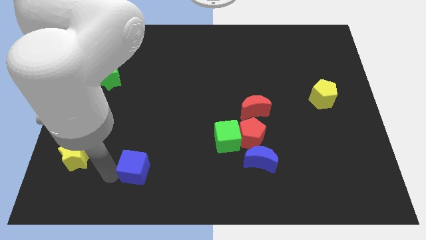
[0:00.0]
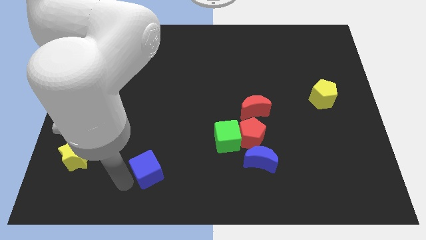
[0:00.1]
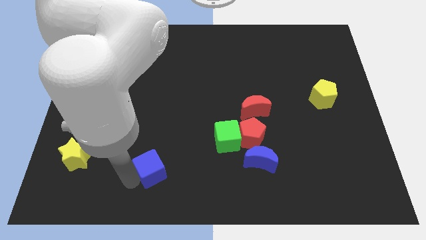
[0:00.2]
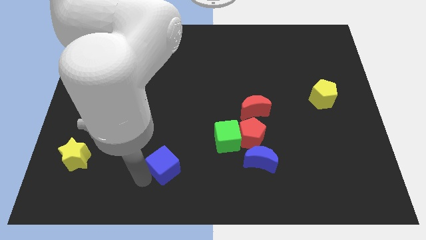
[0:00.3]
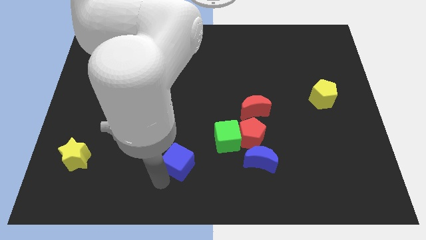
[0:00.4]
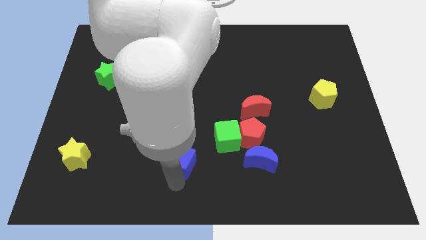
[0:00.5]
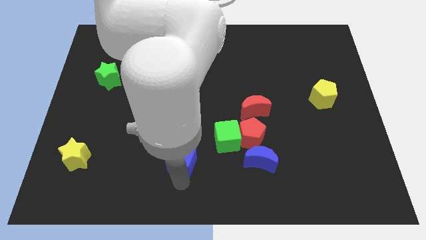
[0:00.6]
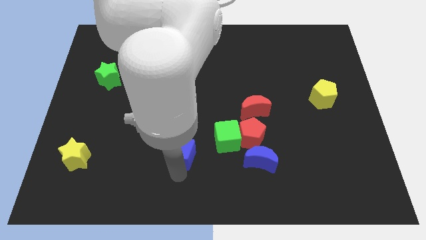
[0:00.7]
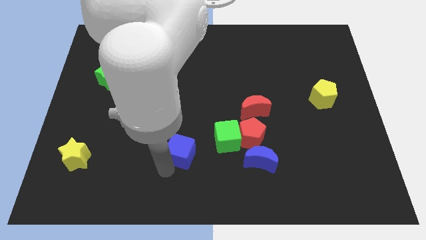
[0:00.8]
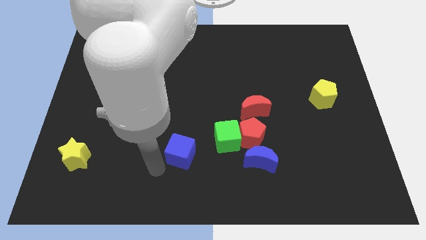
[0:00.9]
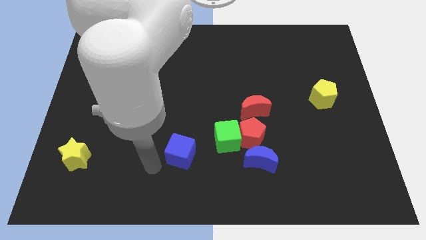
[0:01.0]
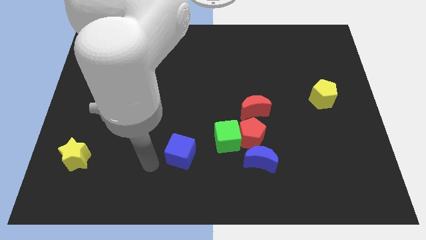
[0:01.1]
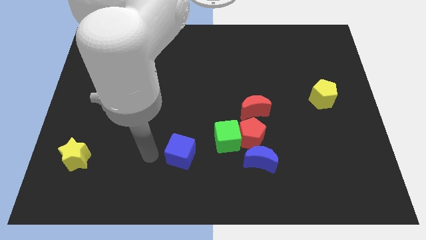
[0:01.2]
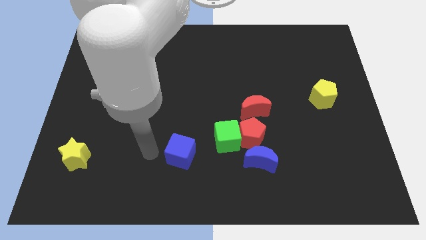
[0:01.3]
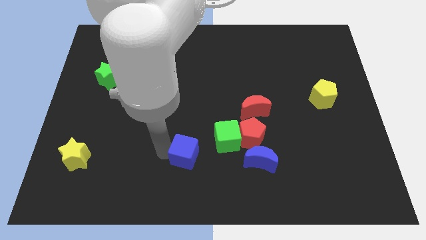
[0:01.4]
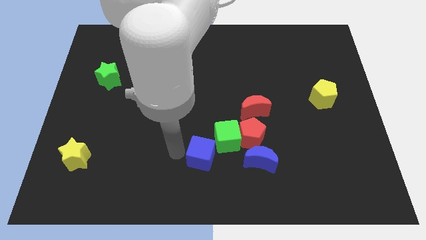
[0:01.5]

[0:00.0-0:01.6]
push the blue cube towards the green cube

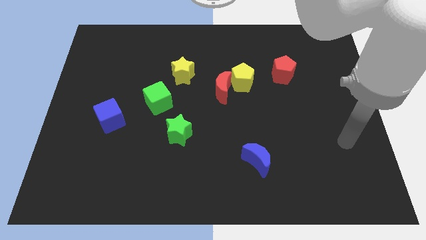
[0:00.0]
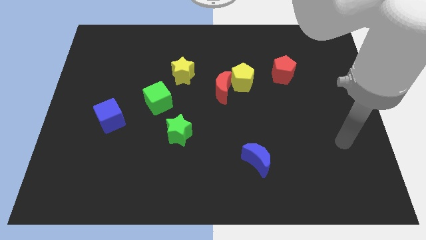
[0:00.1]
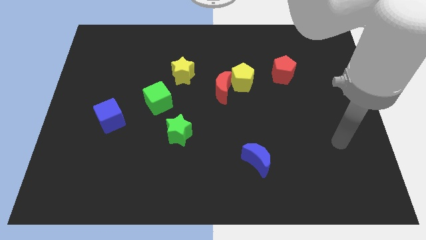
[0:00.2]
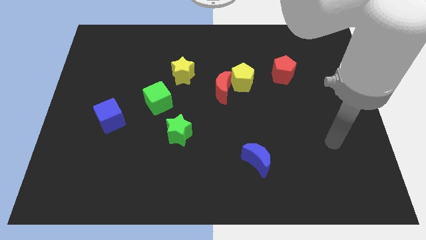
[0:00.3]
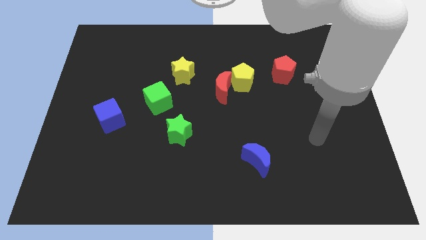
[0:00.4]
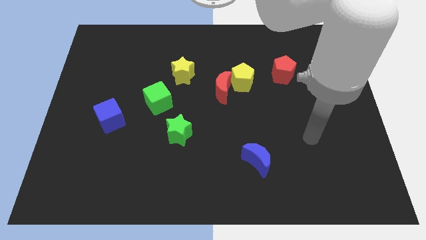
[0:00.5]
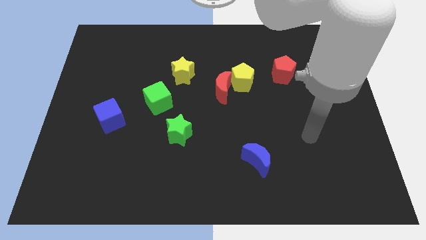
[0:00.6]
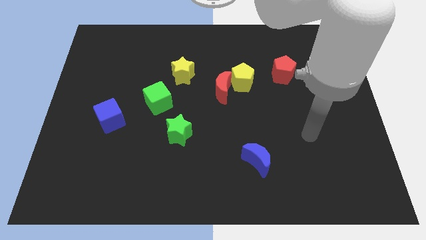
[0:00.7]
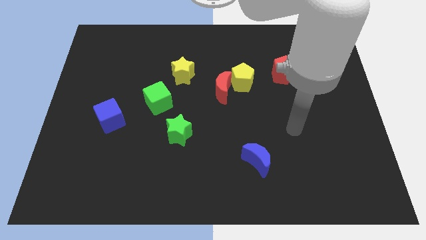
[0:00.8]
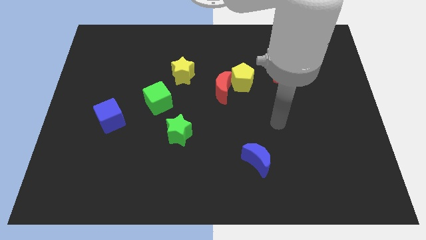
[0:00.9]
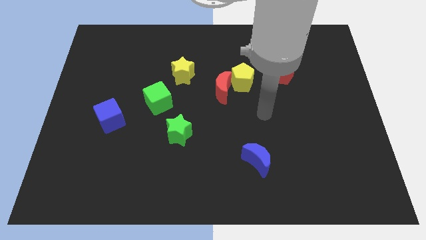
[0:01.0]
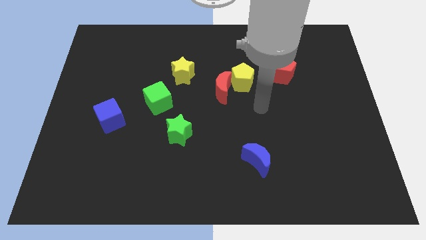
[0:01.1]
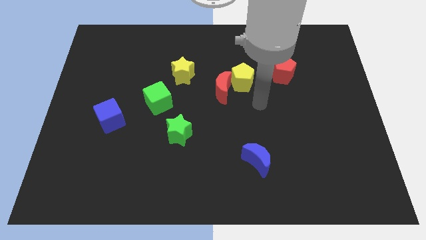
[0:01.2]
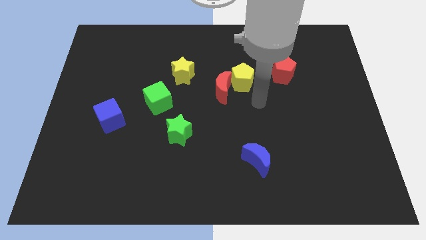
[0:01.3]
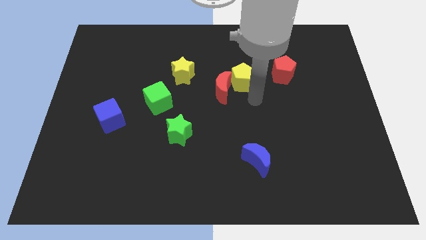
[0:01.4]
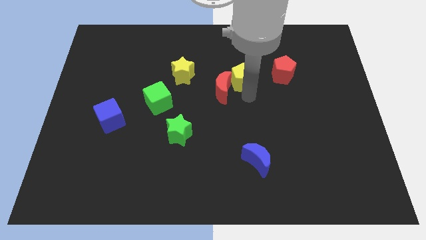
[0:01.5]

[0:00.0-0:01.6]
point your arm at the bottom of the yellow pentagon

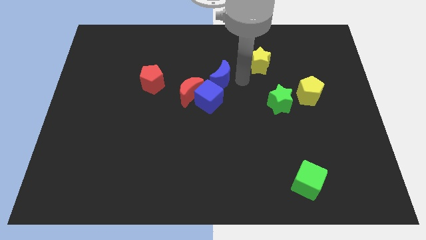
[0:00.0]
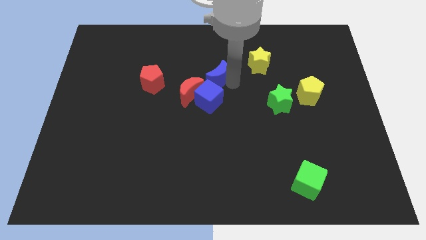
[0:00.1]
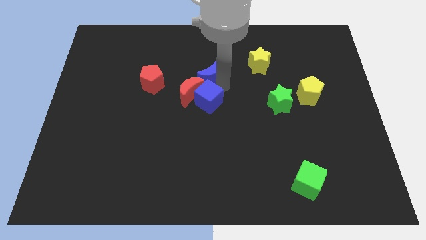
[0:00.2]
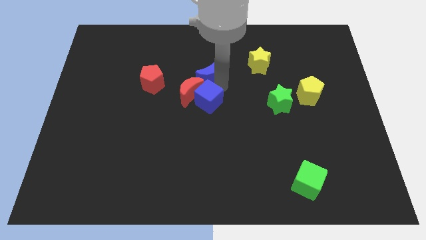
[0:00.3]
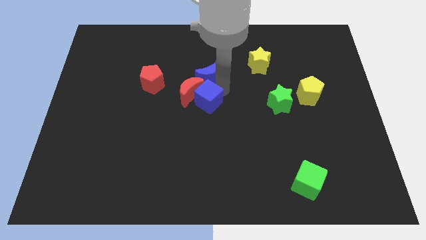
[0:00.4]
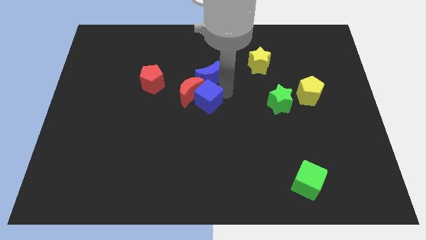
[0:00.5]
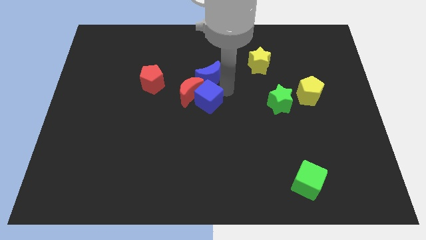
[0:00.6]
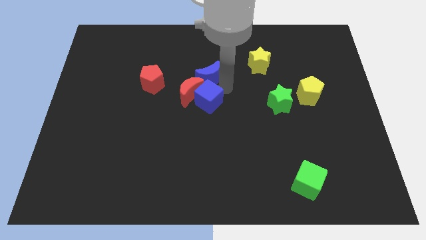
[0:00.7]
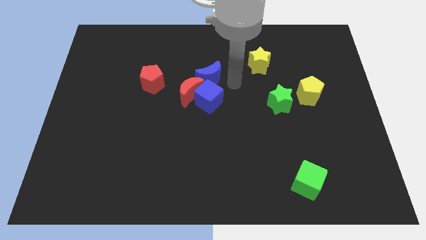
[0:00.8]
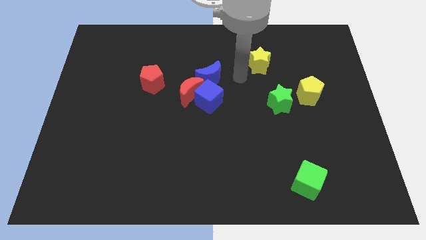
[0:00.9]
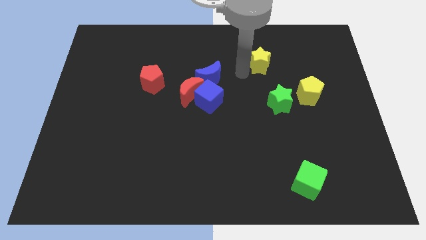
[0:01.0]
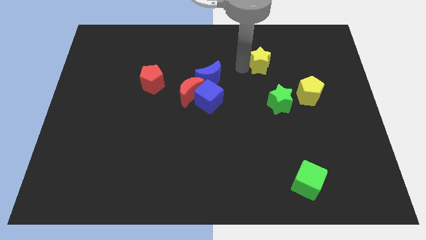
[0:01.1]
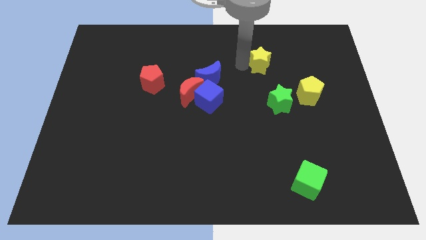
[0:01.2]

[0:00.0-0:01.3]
place the arm towards the left side of the yellow star

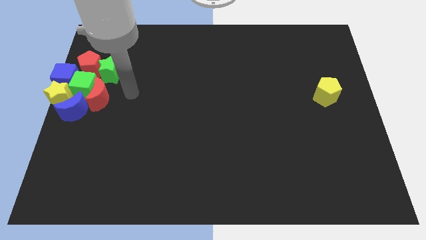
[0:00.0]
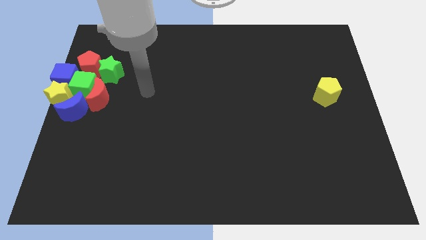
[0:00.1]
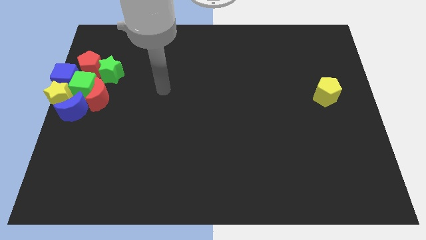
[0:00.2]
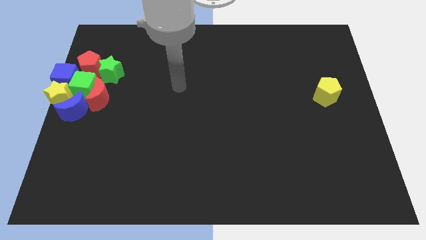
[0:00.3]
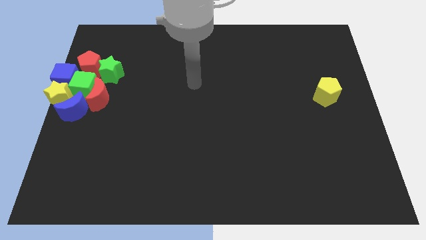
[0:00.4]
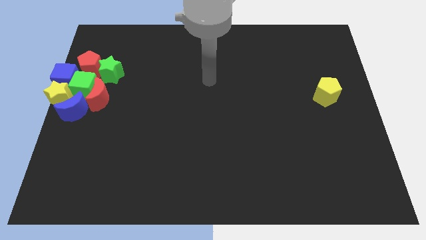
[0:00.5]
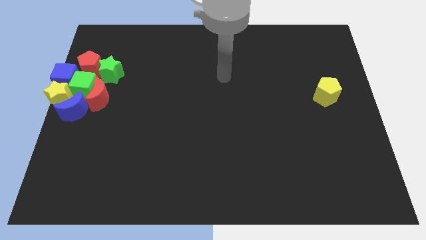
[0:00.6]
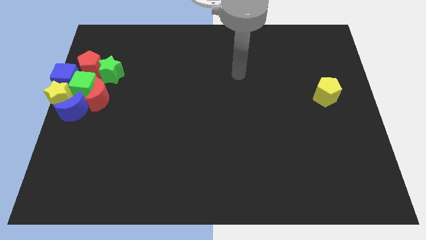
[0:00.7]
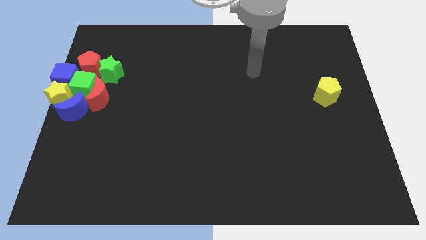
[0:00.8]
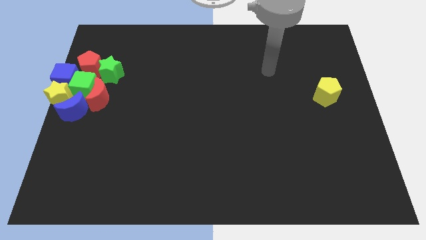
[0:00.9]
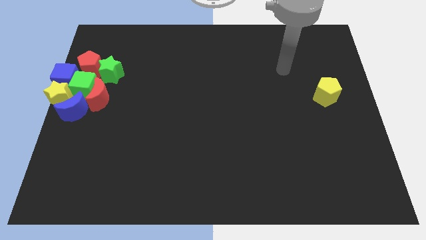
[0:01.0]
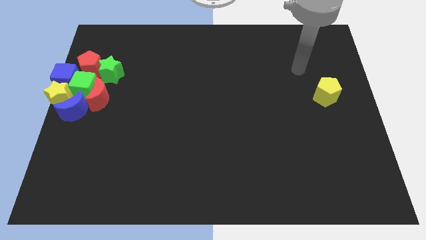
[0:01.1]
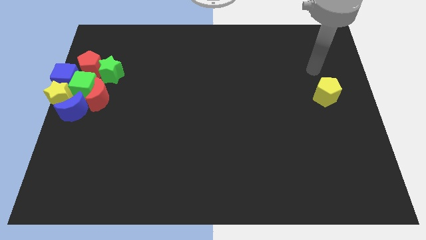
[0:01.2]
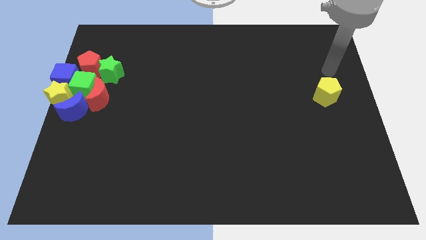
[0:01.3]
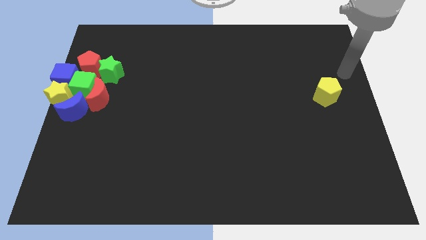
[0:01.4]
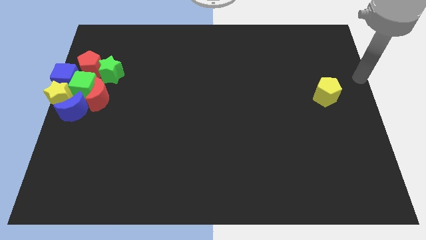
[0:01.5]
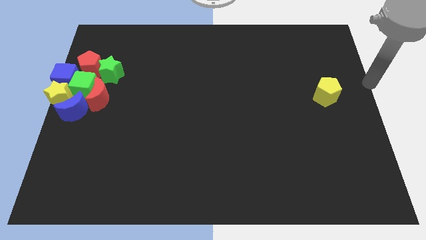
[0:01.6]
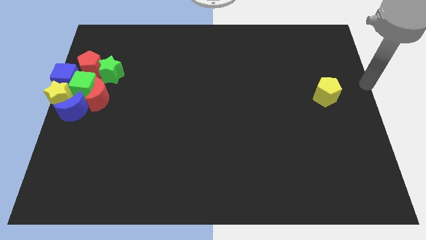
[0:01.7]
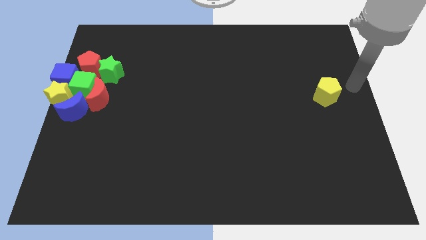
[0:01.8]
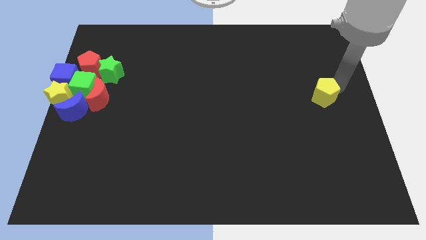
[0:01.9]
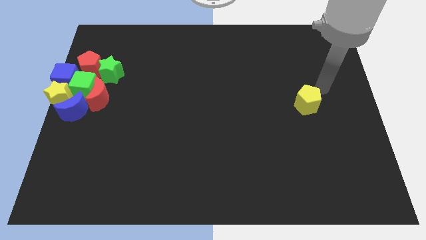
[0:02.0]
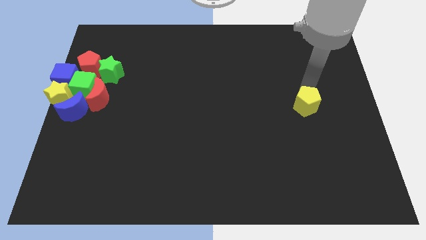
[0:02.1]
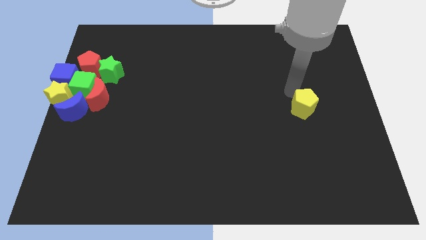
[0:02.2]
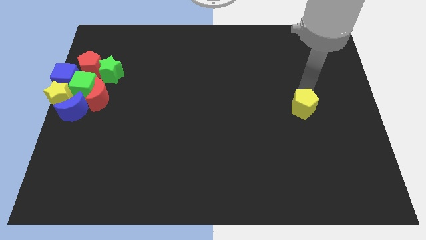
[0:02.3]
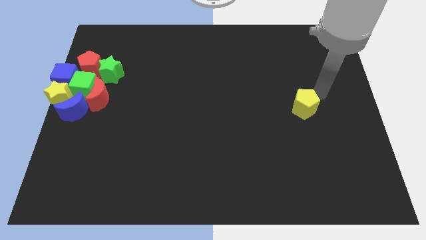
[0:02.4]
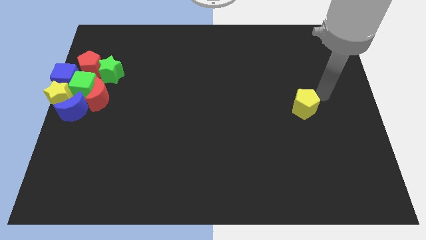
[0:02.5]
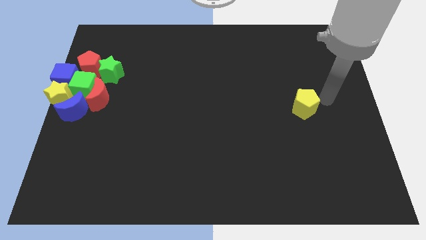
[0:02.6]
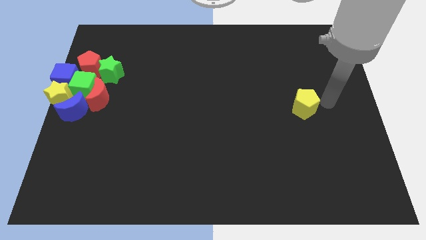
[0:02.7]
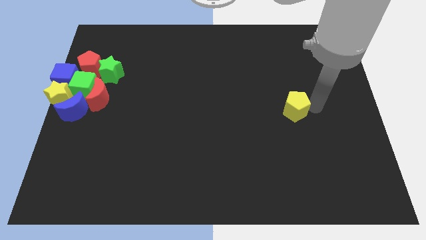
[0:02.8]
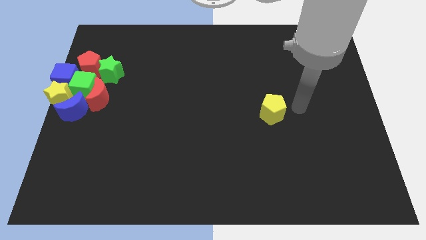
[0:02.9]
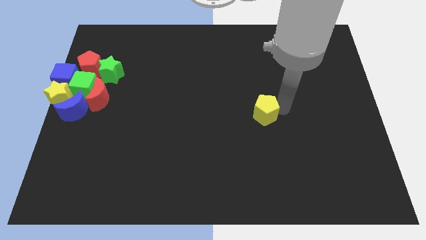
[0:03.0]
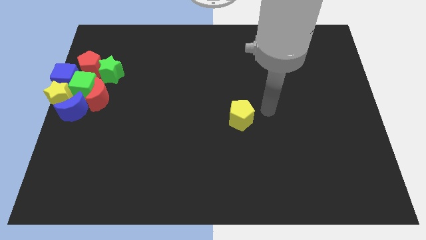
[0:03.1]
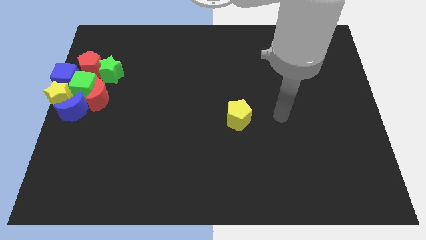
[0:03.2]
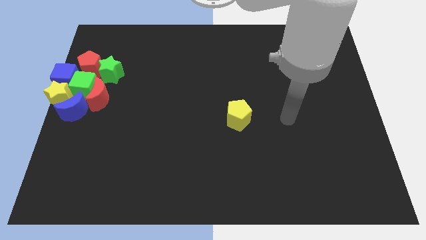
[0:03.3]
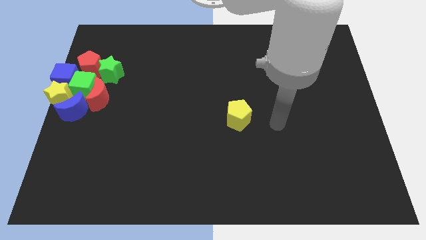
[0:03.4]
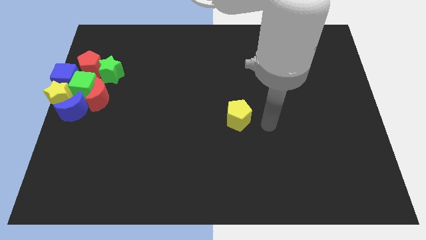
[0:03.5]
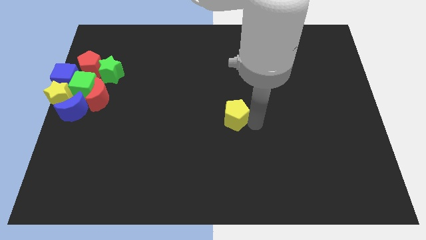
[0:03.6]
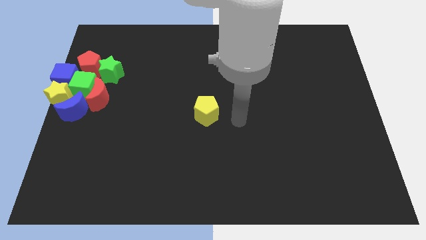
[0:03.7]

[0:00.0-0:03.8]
move the yellow pentagon to the center

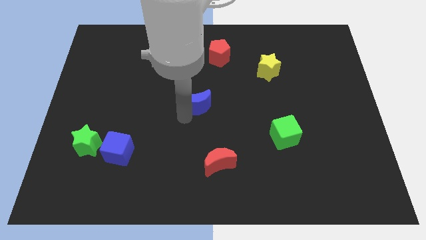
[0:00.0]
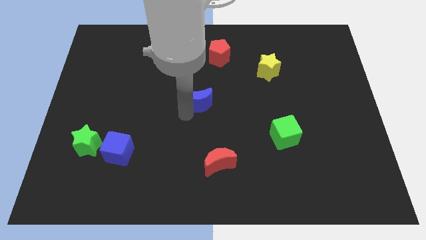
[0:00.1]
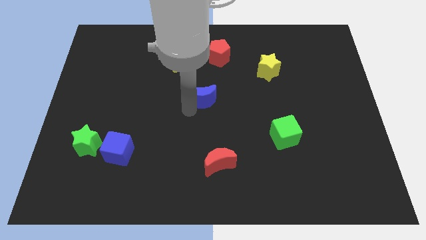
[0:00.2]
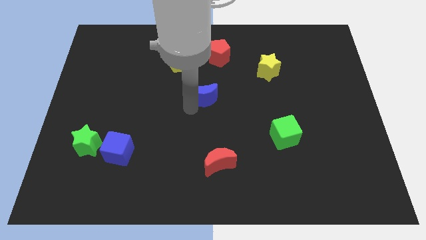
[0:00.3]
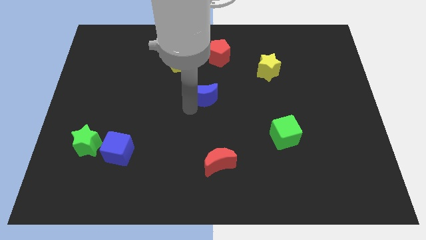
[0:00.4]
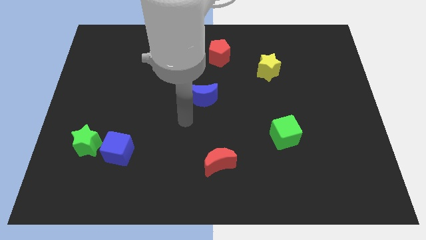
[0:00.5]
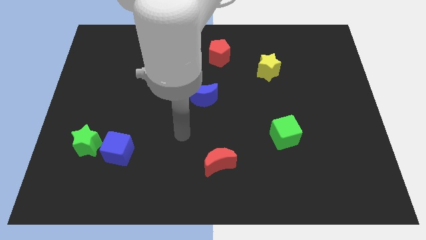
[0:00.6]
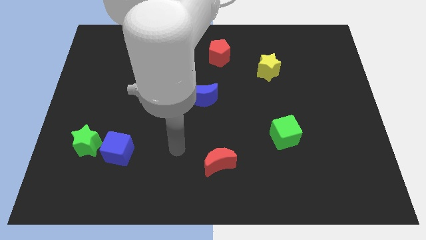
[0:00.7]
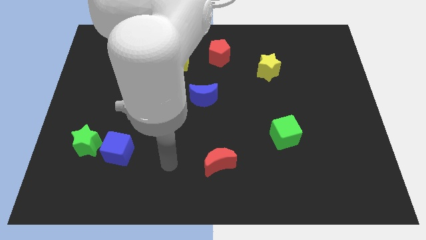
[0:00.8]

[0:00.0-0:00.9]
place the blue moon below the red pentagon and the yellow pentagon to form a triangle
